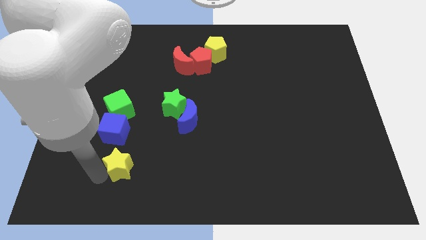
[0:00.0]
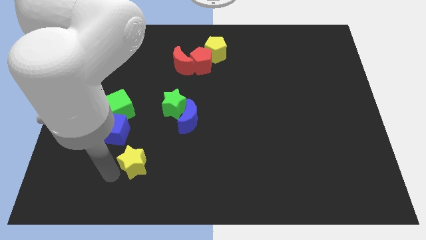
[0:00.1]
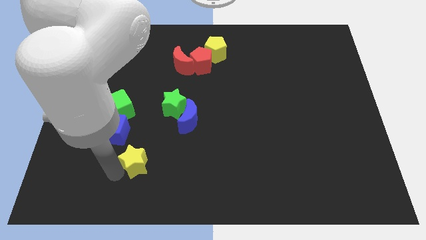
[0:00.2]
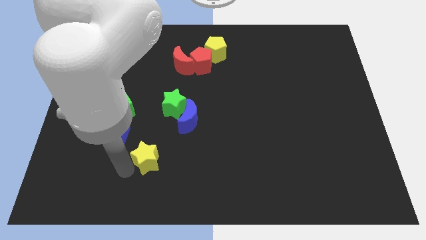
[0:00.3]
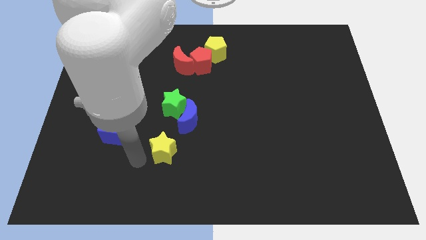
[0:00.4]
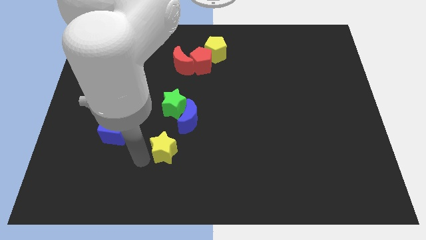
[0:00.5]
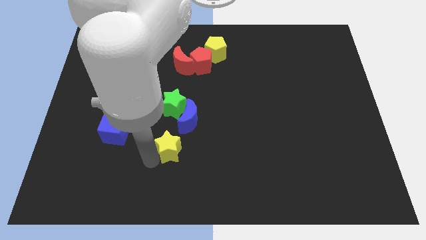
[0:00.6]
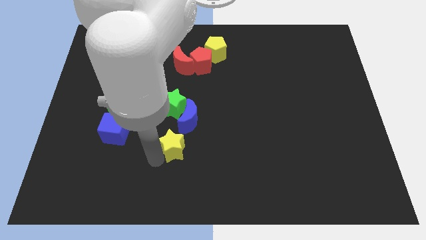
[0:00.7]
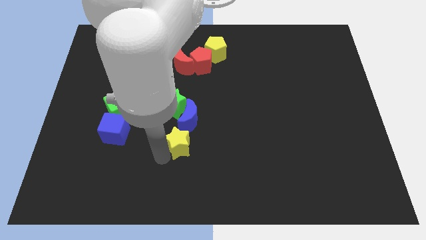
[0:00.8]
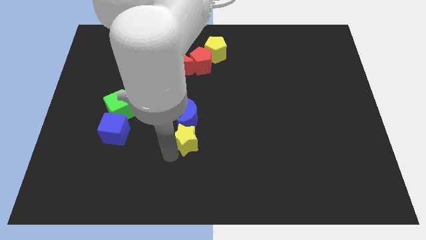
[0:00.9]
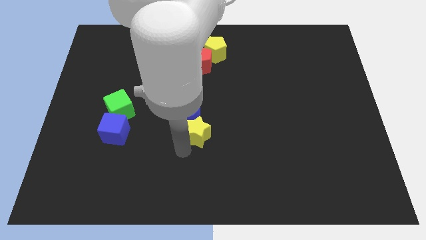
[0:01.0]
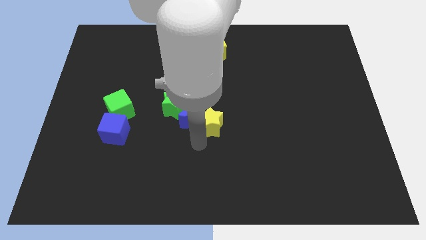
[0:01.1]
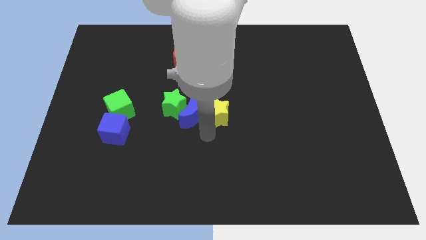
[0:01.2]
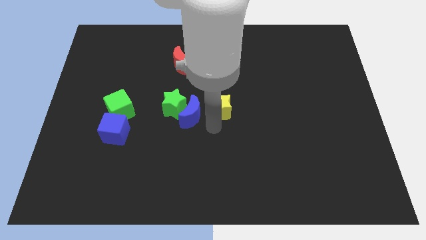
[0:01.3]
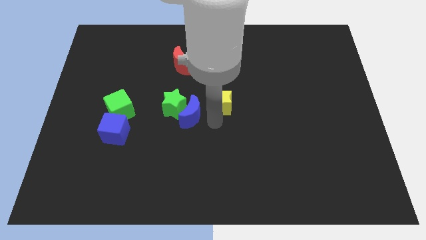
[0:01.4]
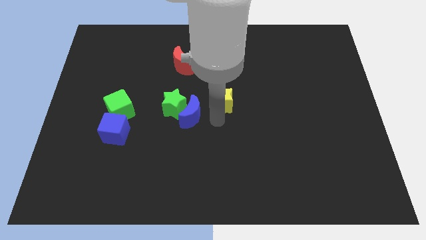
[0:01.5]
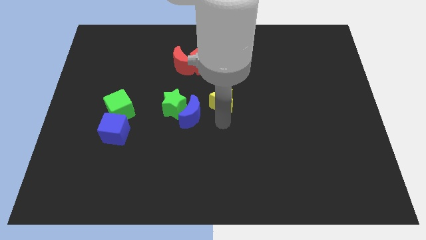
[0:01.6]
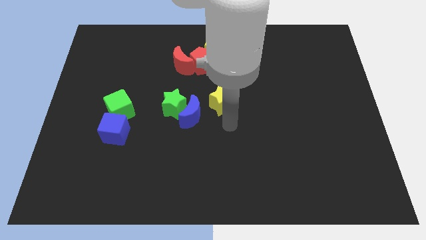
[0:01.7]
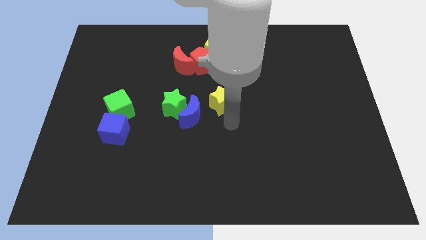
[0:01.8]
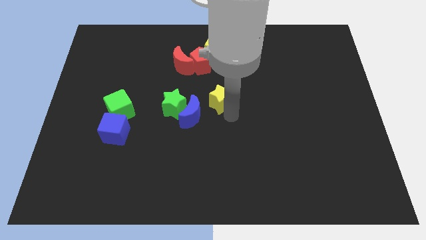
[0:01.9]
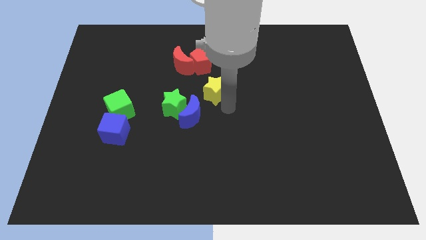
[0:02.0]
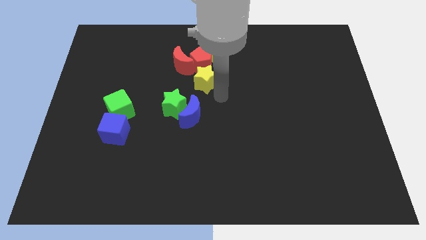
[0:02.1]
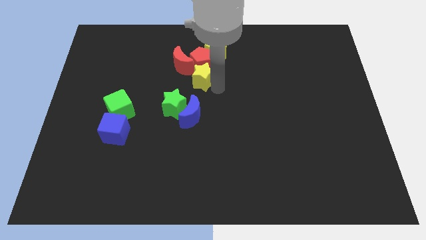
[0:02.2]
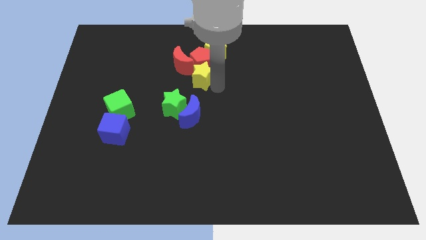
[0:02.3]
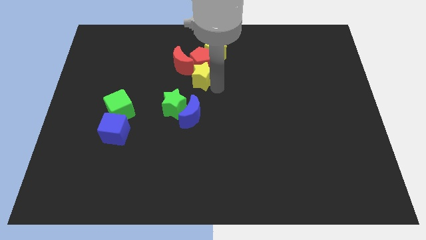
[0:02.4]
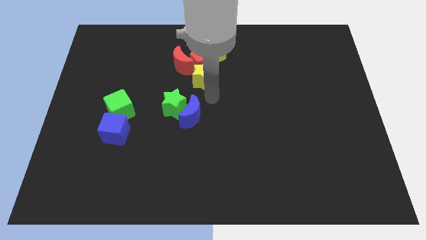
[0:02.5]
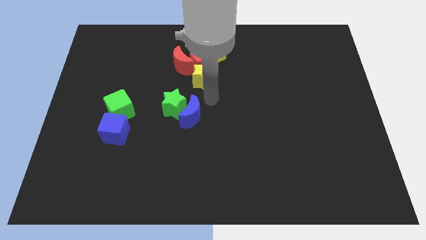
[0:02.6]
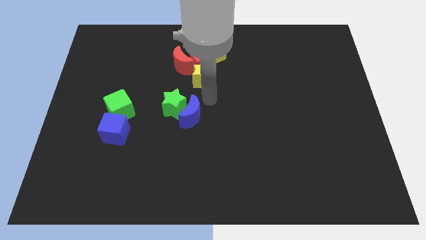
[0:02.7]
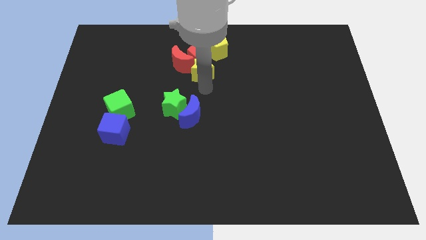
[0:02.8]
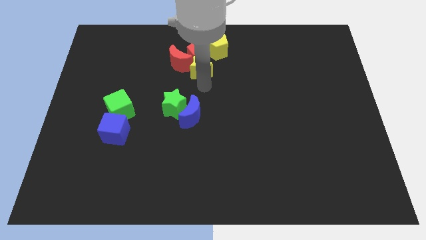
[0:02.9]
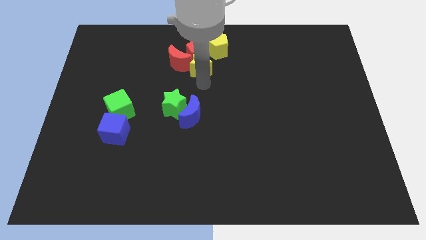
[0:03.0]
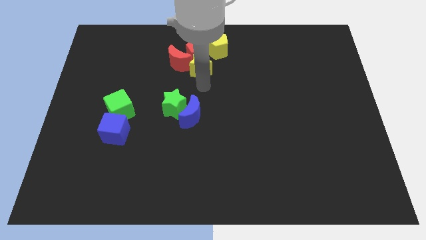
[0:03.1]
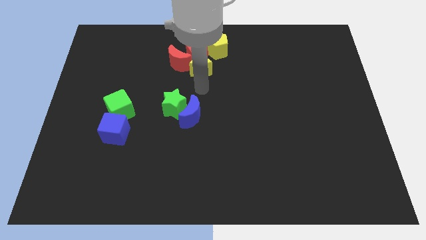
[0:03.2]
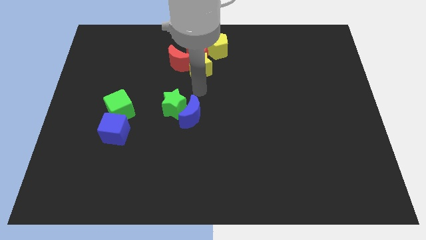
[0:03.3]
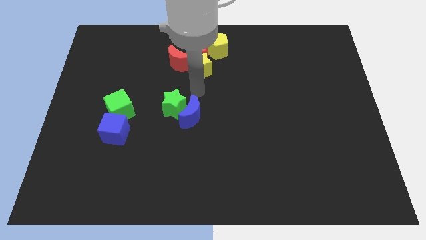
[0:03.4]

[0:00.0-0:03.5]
move the yellow star into the red blocks

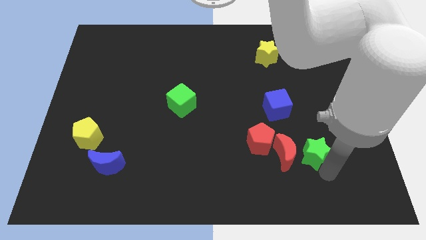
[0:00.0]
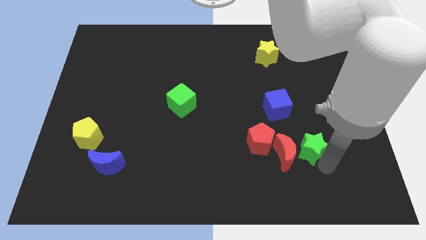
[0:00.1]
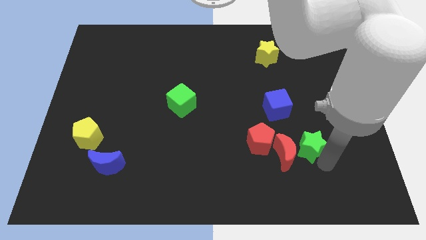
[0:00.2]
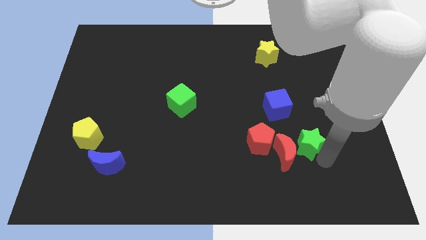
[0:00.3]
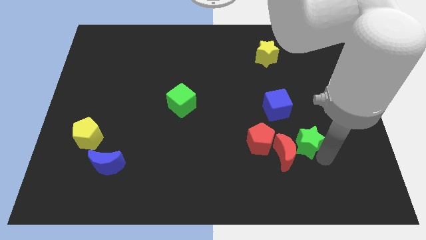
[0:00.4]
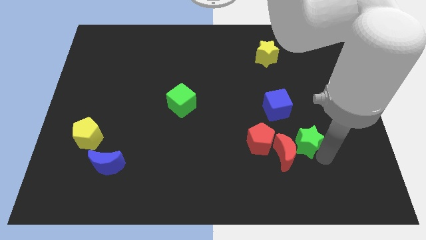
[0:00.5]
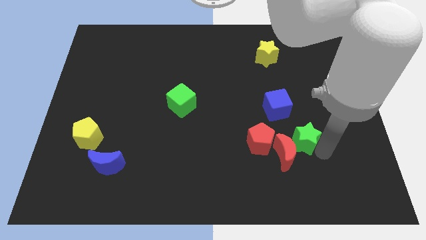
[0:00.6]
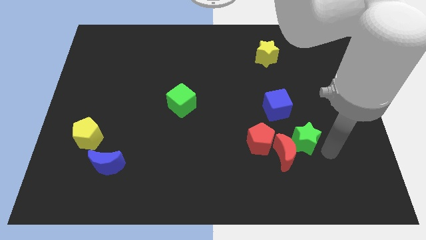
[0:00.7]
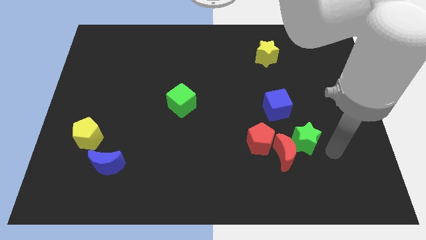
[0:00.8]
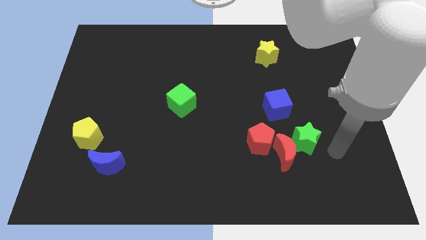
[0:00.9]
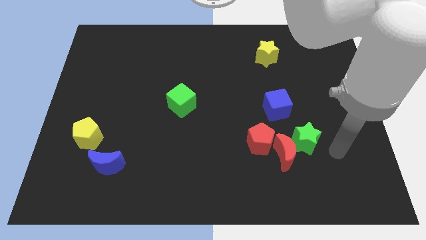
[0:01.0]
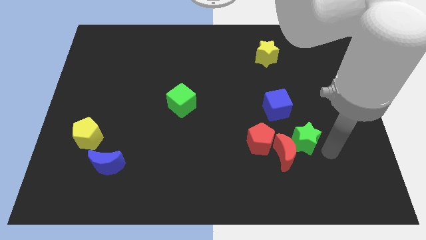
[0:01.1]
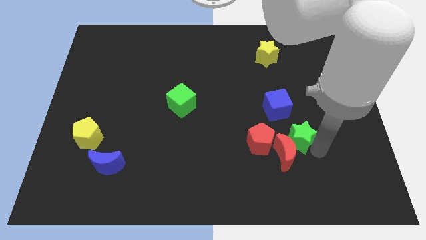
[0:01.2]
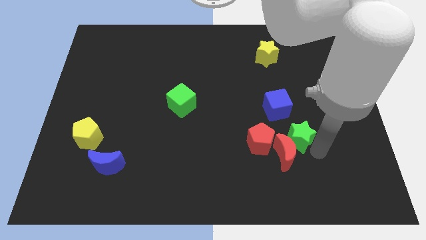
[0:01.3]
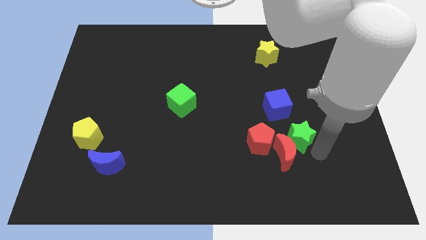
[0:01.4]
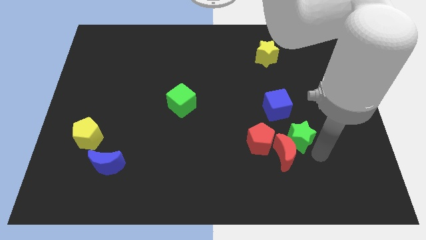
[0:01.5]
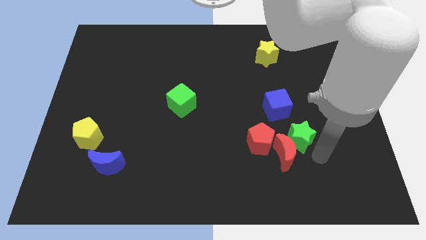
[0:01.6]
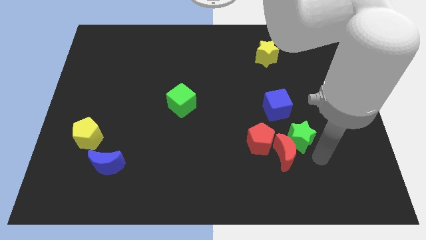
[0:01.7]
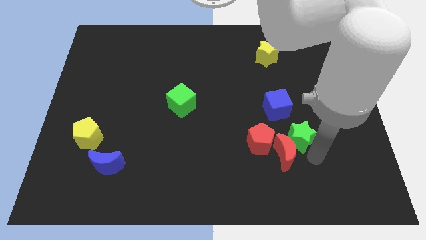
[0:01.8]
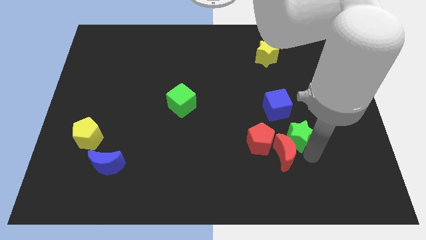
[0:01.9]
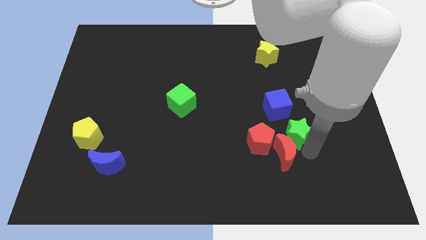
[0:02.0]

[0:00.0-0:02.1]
push the green star to the right of the red pentagon

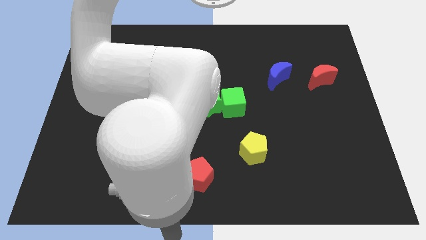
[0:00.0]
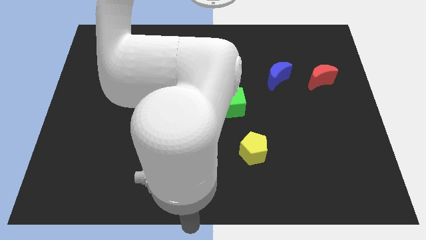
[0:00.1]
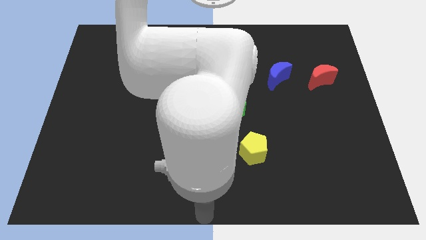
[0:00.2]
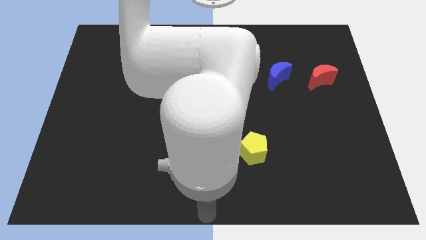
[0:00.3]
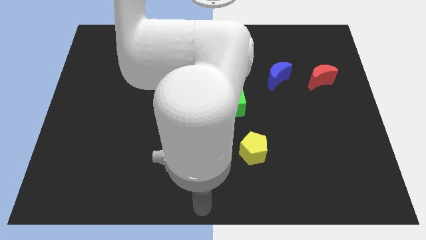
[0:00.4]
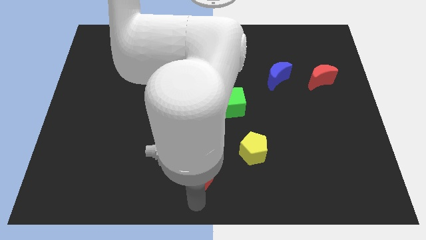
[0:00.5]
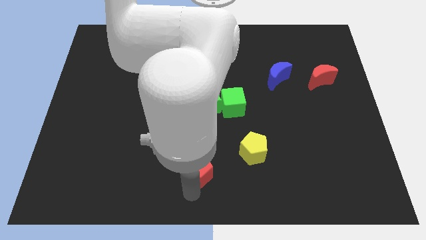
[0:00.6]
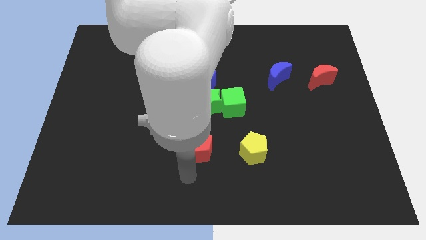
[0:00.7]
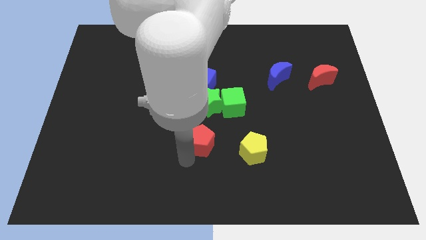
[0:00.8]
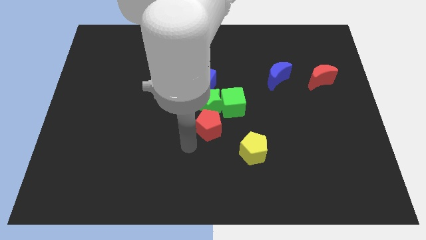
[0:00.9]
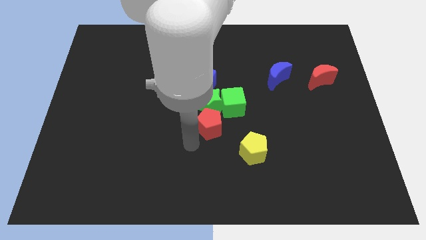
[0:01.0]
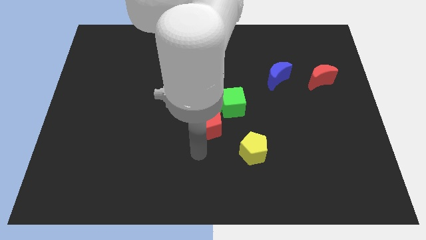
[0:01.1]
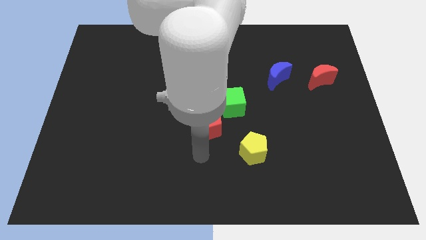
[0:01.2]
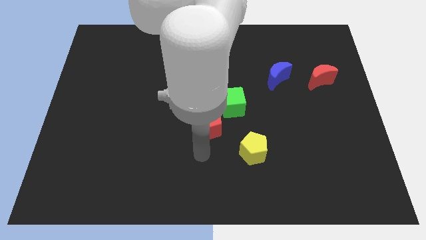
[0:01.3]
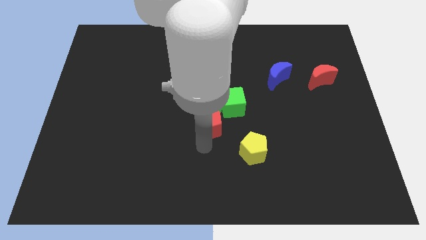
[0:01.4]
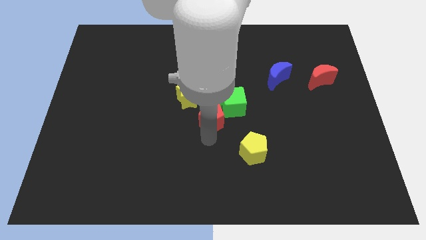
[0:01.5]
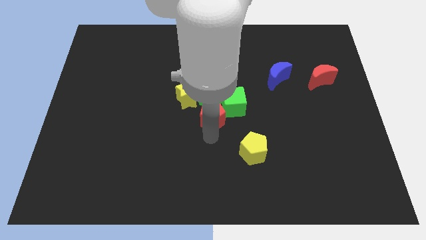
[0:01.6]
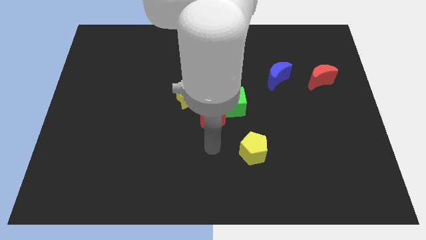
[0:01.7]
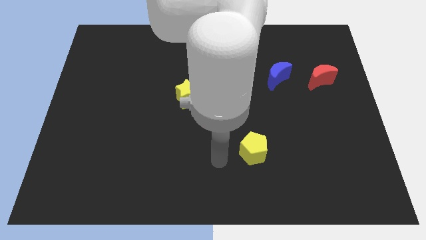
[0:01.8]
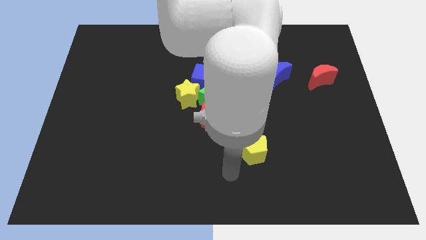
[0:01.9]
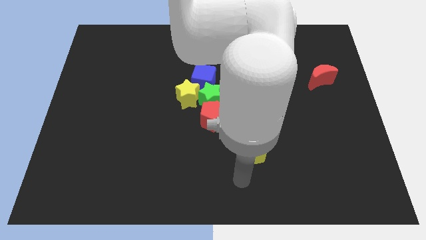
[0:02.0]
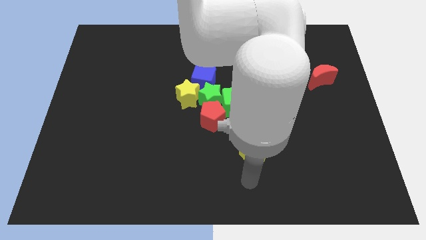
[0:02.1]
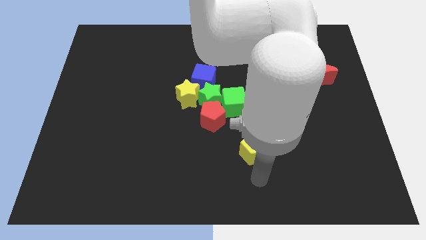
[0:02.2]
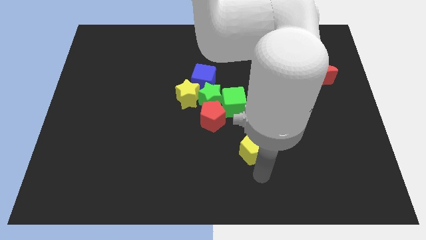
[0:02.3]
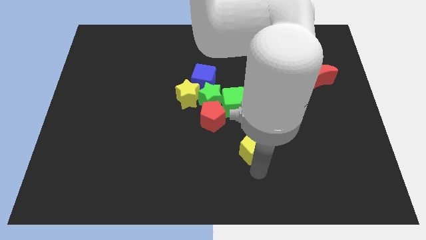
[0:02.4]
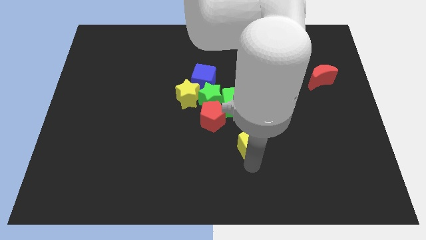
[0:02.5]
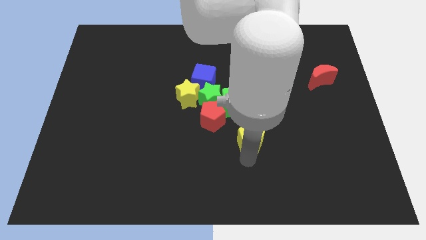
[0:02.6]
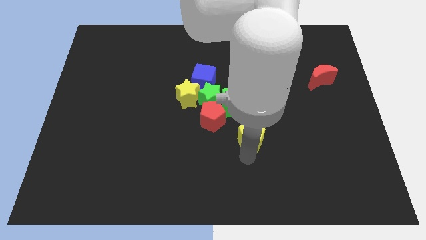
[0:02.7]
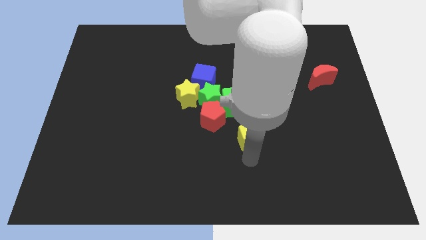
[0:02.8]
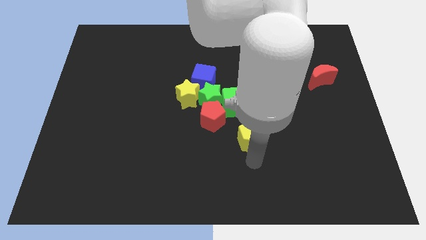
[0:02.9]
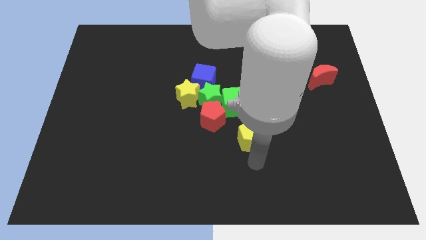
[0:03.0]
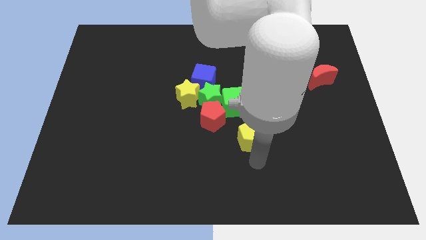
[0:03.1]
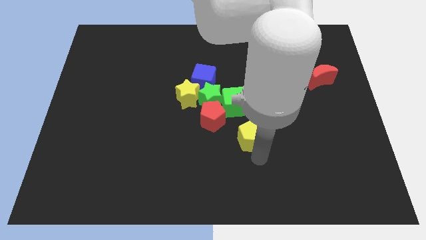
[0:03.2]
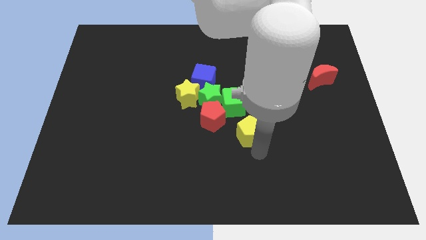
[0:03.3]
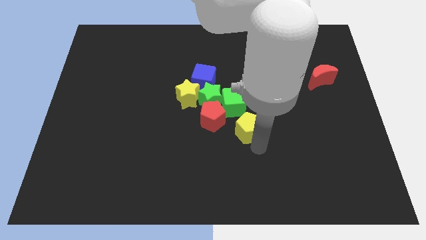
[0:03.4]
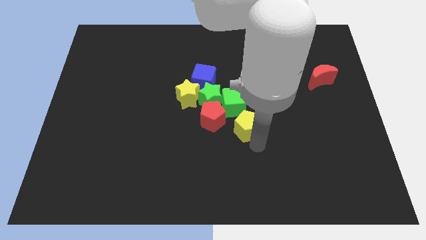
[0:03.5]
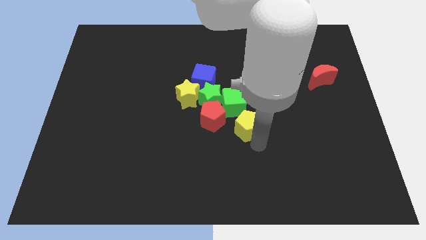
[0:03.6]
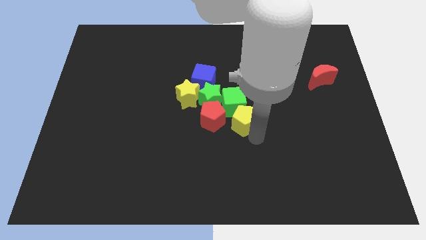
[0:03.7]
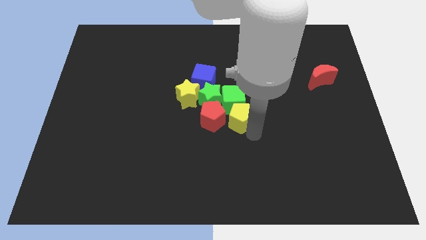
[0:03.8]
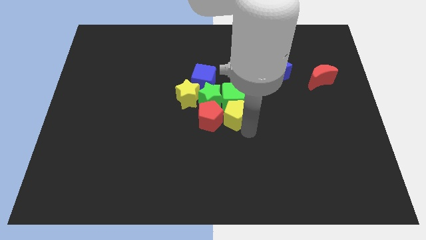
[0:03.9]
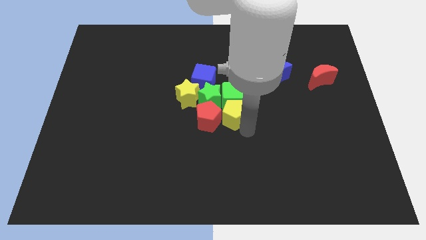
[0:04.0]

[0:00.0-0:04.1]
push the red pentagon into the green star
